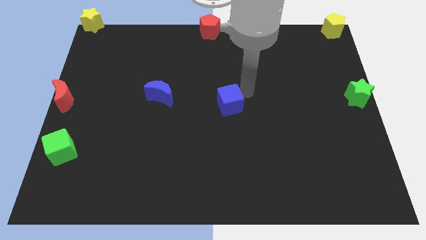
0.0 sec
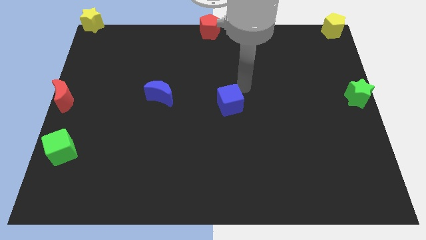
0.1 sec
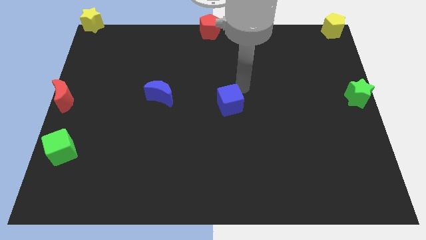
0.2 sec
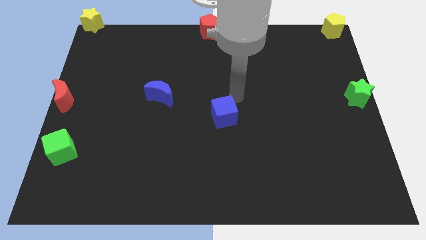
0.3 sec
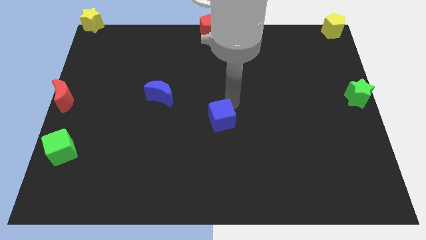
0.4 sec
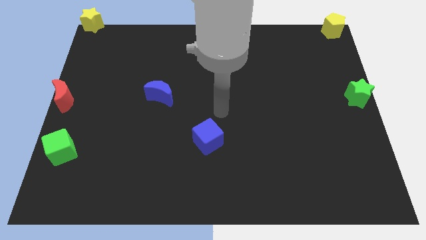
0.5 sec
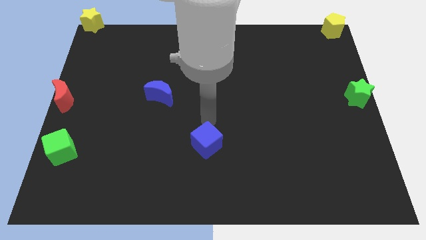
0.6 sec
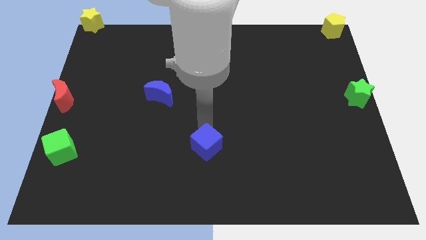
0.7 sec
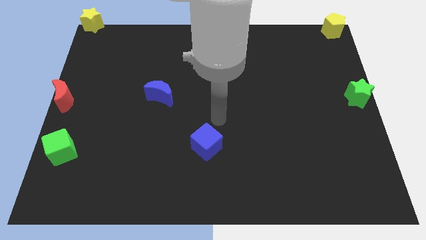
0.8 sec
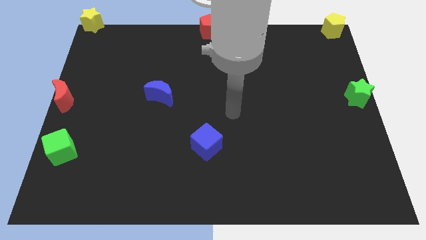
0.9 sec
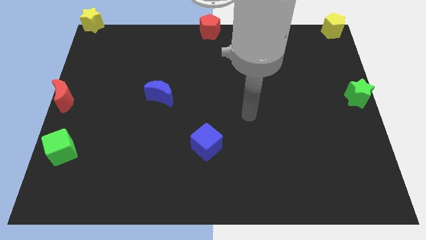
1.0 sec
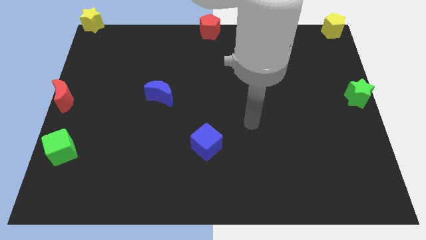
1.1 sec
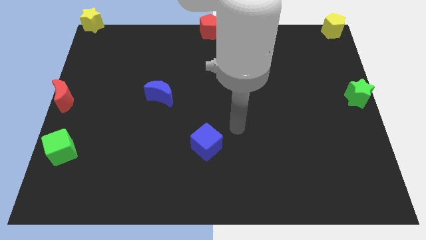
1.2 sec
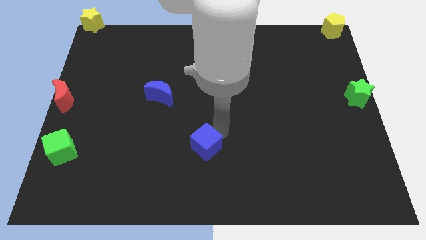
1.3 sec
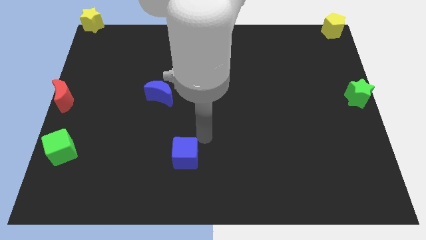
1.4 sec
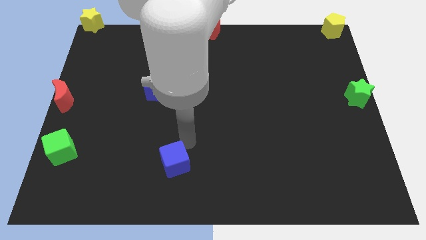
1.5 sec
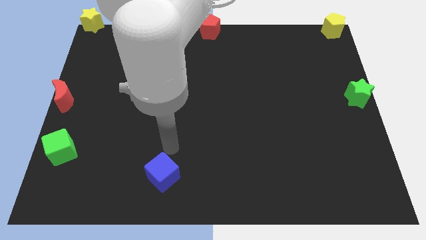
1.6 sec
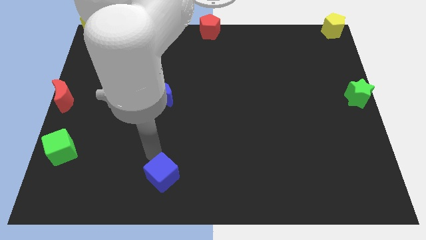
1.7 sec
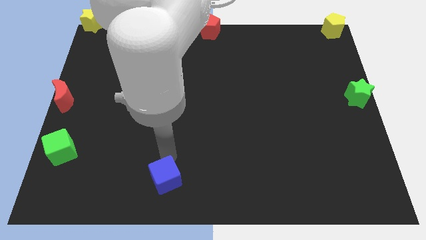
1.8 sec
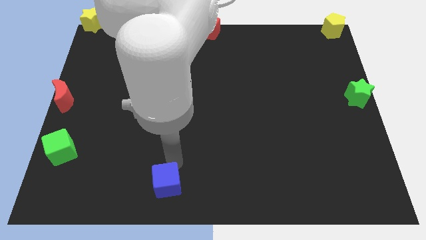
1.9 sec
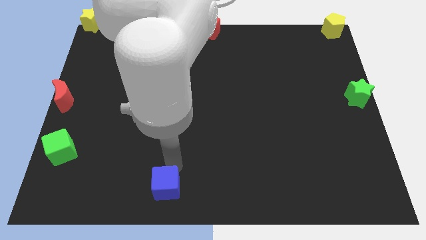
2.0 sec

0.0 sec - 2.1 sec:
move the blue cube towards the bottom center

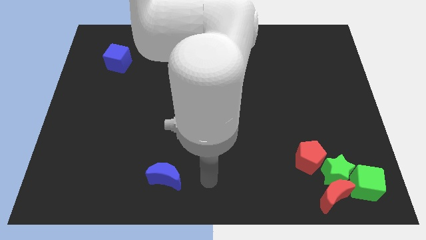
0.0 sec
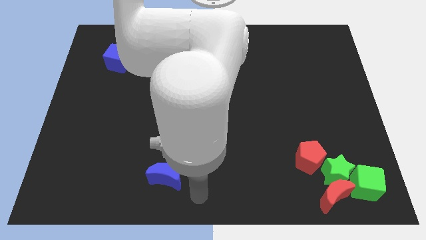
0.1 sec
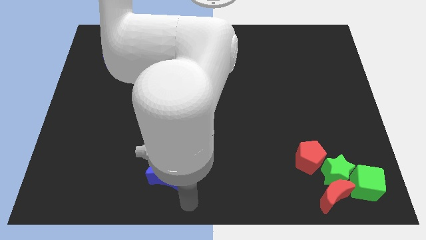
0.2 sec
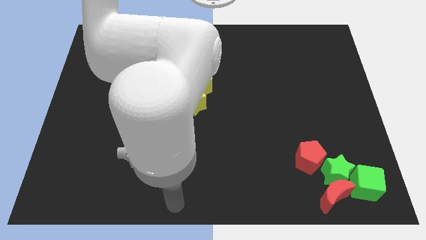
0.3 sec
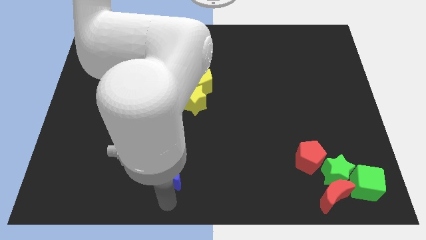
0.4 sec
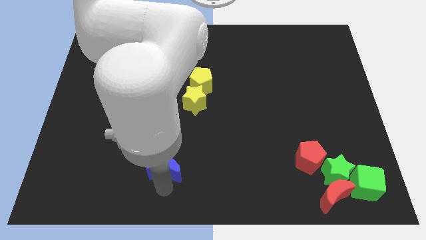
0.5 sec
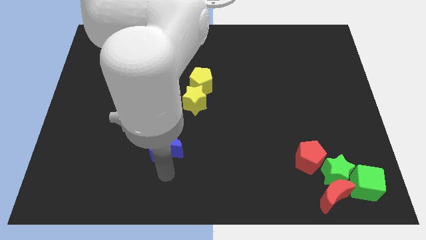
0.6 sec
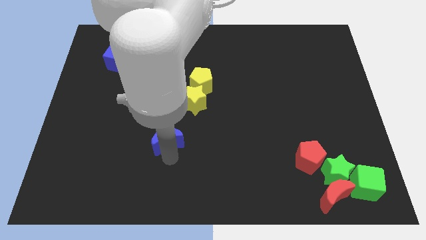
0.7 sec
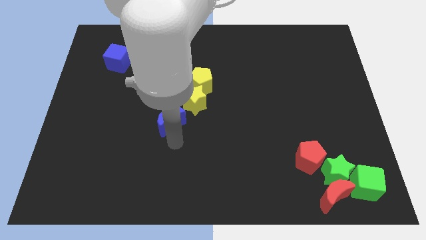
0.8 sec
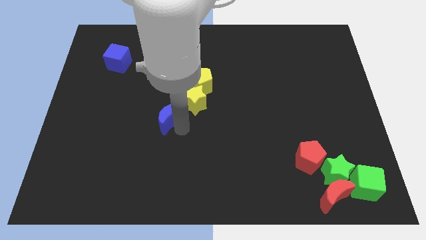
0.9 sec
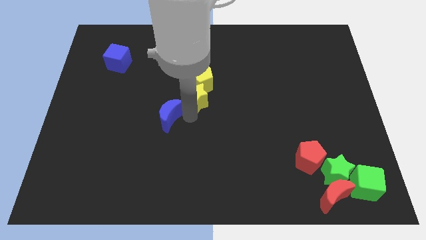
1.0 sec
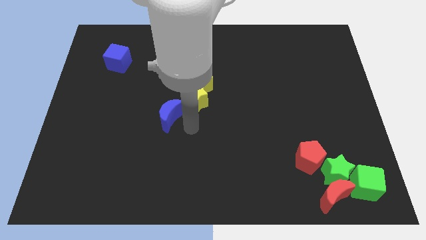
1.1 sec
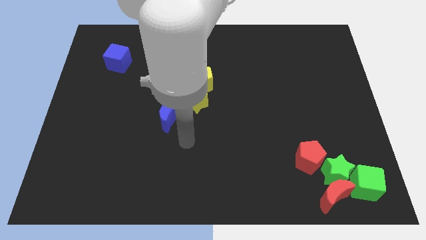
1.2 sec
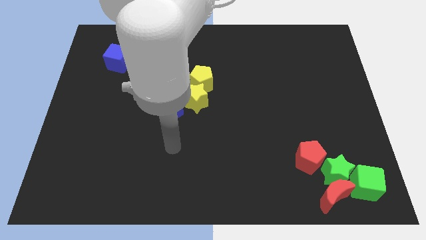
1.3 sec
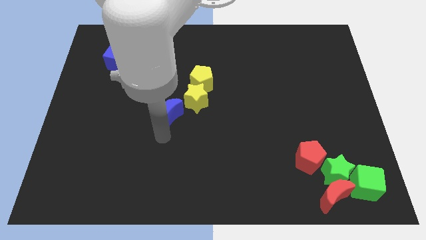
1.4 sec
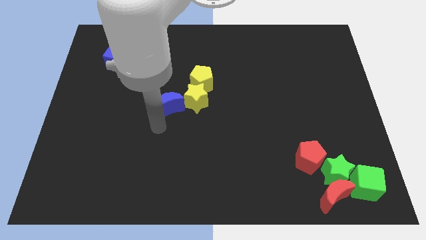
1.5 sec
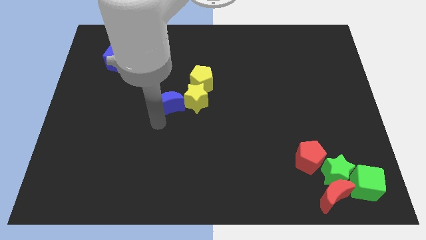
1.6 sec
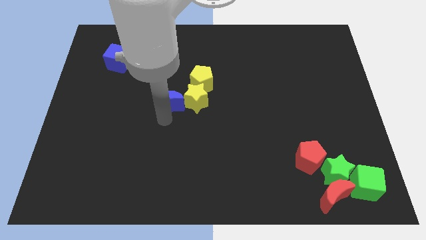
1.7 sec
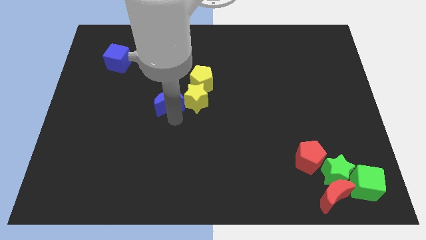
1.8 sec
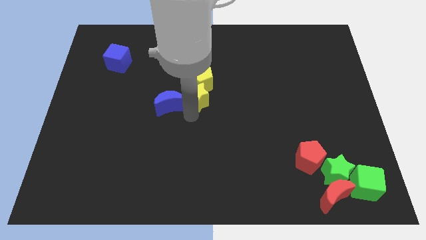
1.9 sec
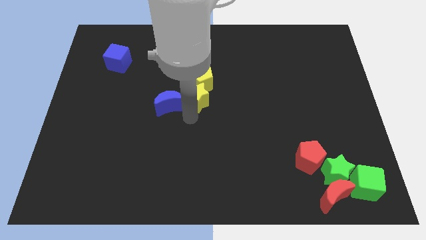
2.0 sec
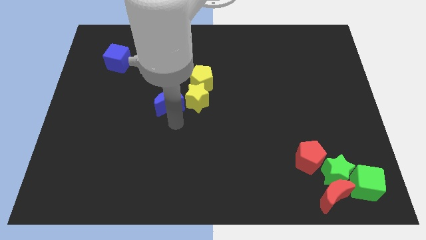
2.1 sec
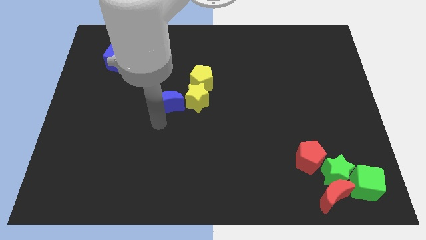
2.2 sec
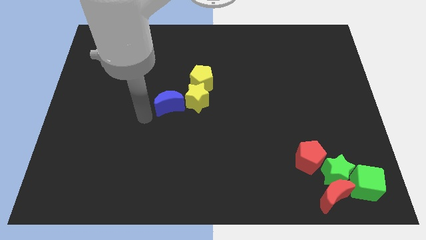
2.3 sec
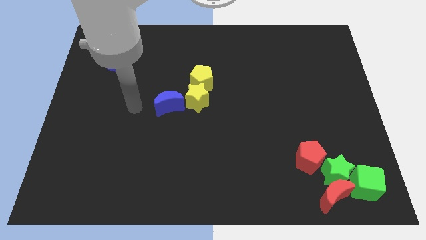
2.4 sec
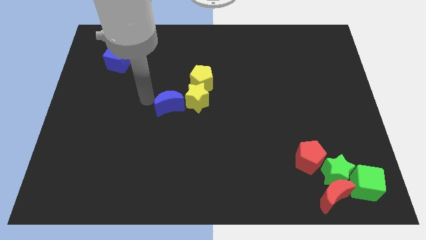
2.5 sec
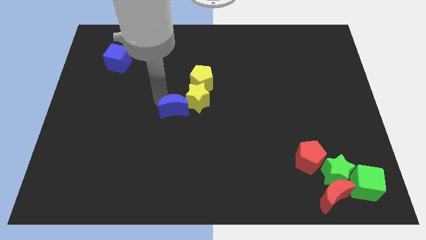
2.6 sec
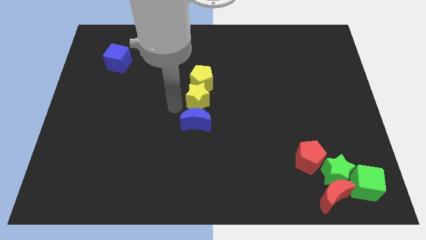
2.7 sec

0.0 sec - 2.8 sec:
place the blue moon to the bottom of yellow star

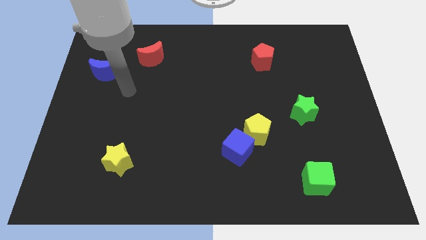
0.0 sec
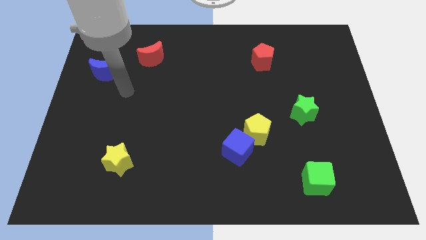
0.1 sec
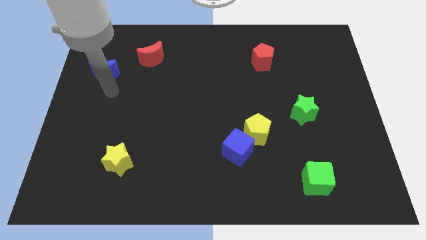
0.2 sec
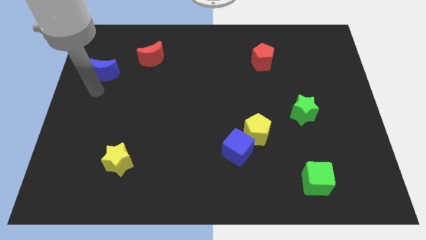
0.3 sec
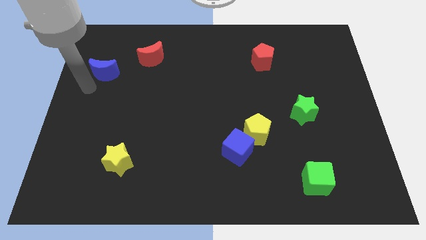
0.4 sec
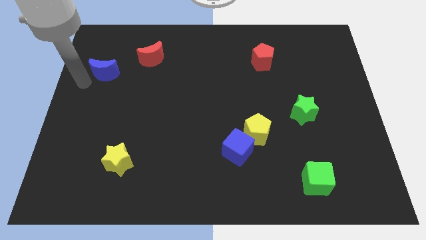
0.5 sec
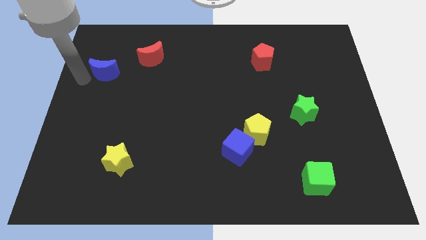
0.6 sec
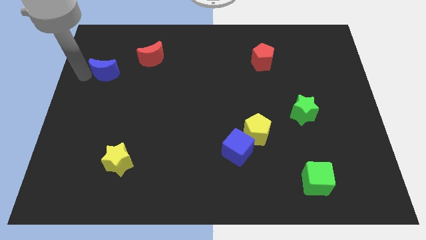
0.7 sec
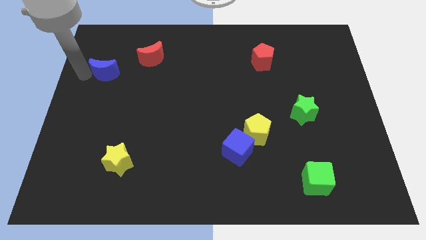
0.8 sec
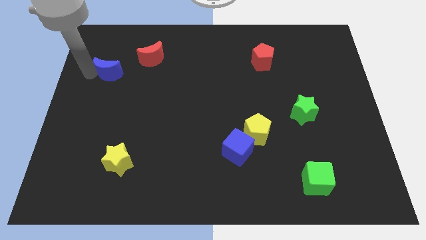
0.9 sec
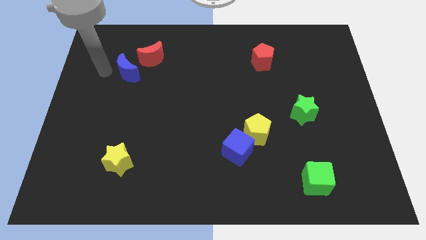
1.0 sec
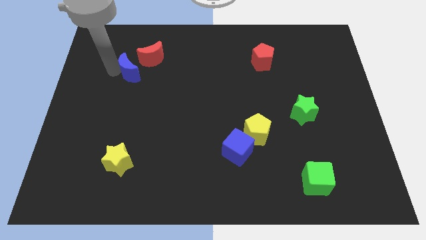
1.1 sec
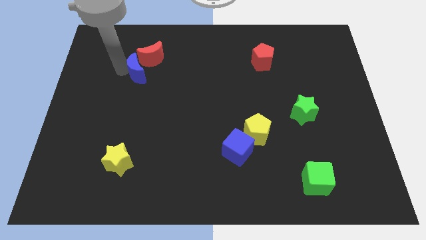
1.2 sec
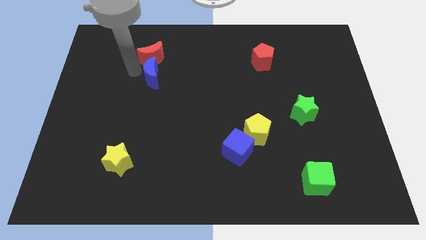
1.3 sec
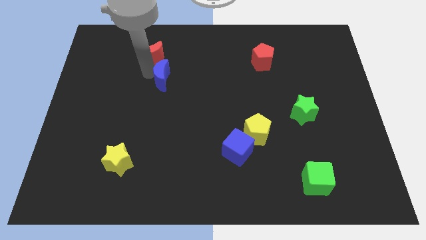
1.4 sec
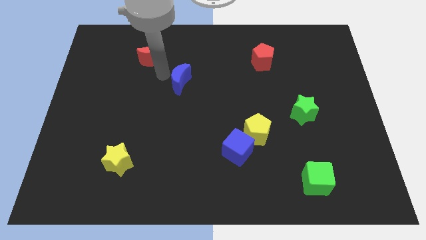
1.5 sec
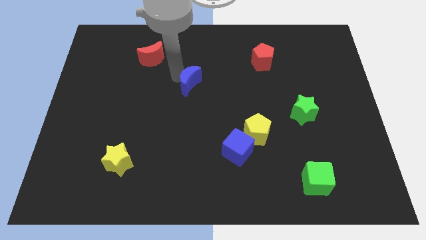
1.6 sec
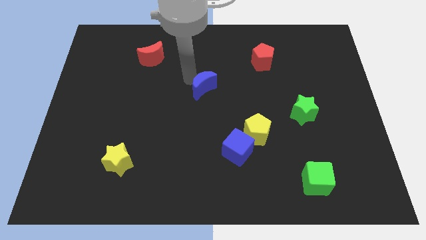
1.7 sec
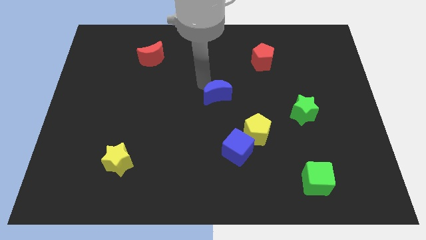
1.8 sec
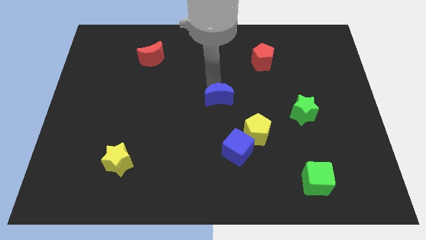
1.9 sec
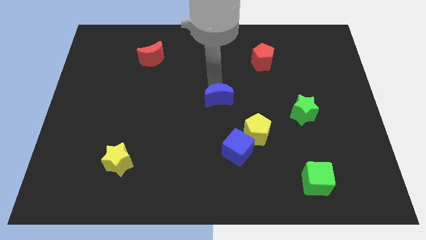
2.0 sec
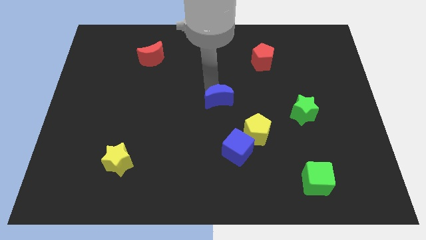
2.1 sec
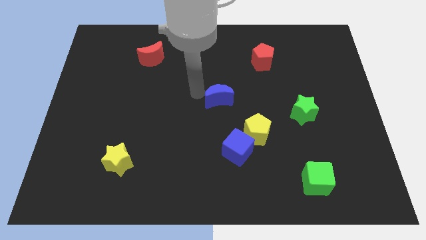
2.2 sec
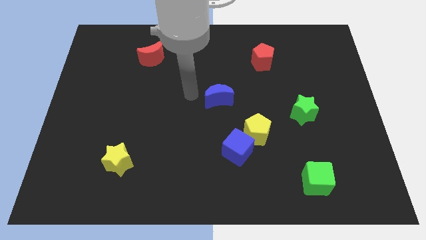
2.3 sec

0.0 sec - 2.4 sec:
put the blue crescent at the center of the board

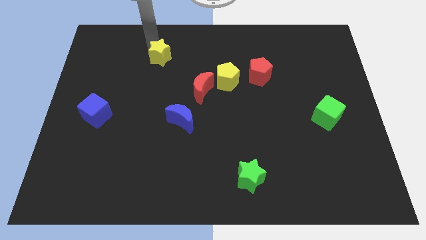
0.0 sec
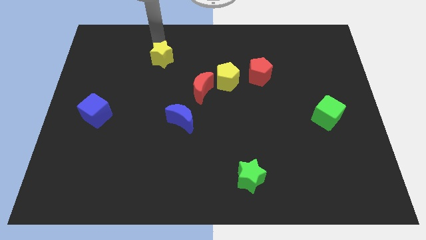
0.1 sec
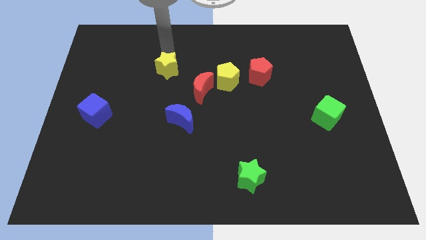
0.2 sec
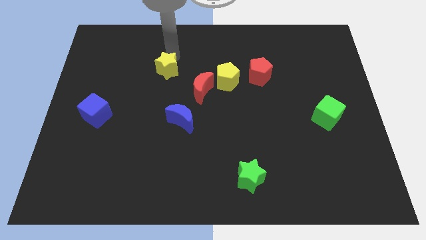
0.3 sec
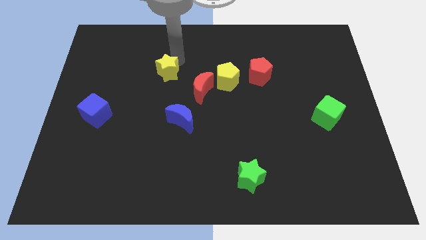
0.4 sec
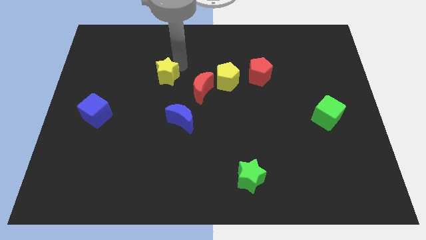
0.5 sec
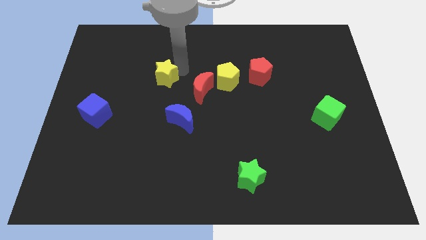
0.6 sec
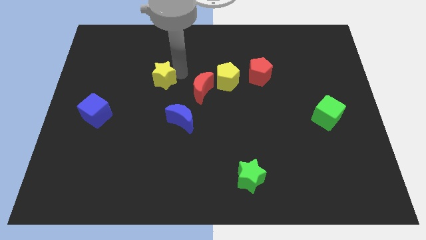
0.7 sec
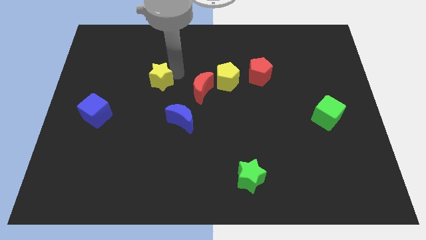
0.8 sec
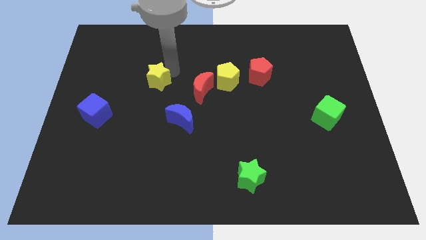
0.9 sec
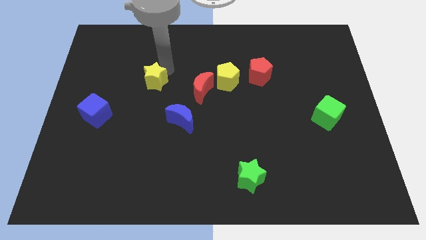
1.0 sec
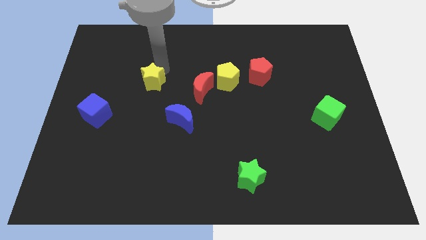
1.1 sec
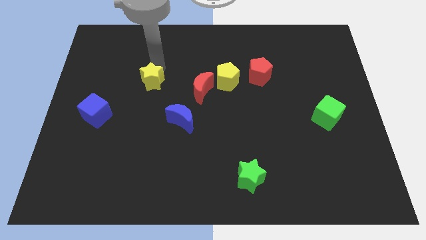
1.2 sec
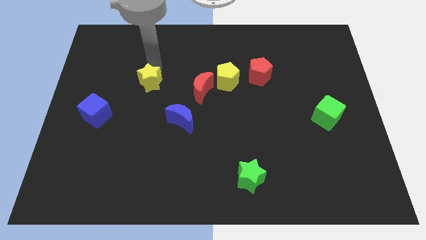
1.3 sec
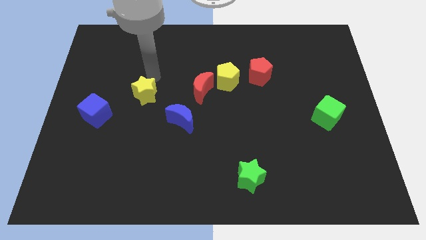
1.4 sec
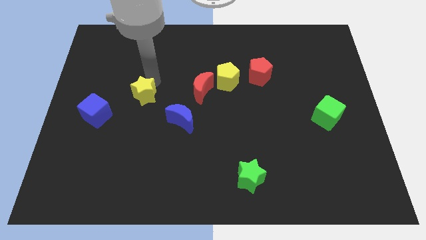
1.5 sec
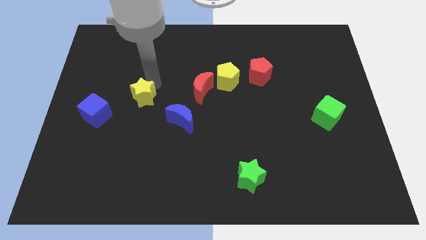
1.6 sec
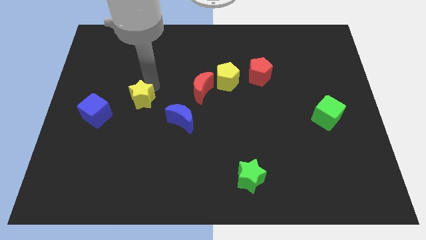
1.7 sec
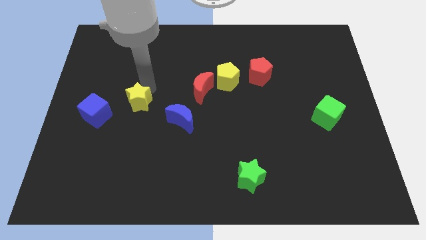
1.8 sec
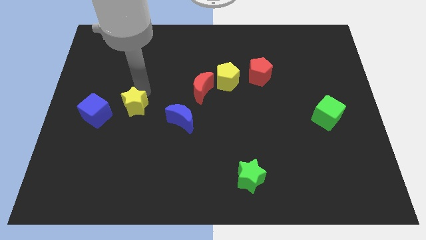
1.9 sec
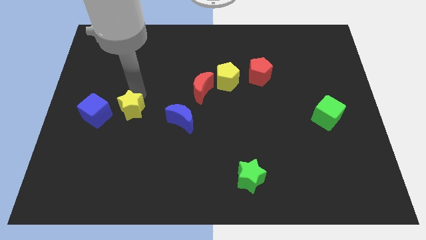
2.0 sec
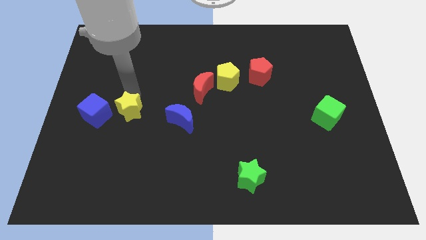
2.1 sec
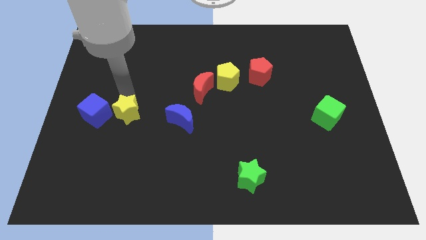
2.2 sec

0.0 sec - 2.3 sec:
push the yellow star to the right of the blue cube
